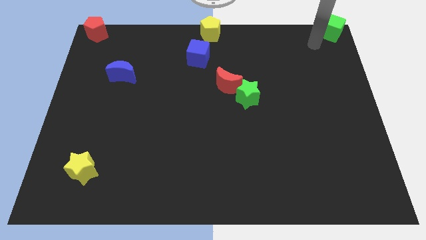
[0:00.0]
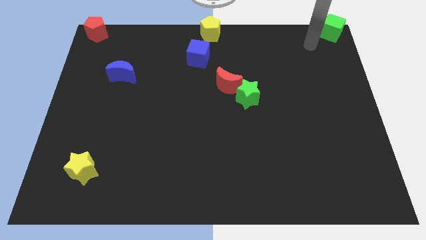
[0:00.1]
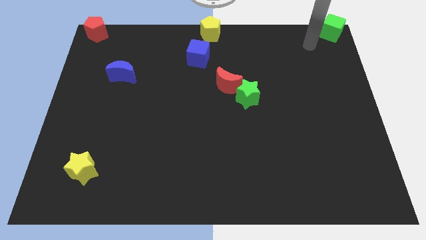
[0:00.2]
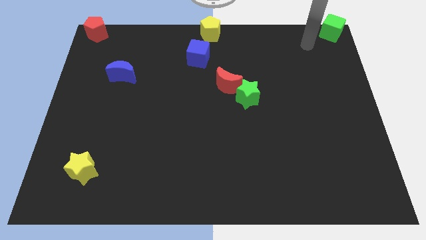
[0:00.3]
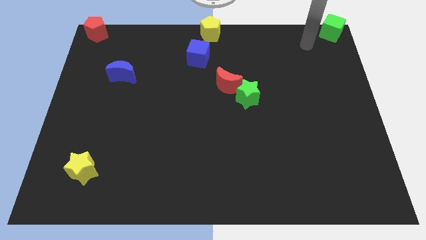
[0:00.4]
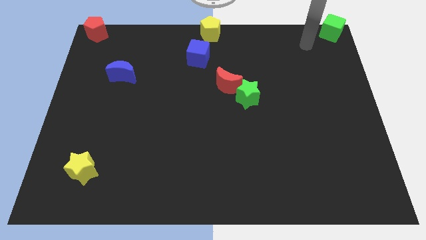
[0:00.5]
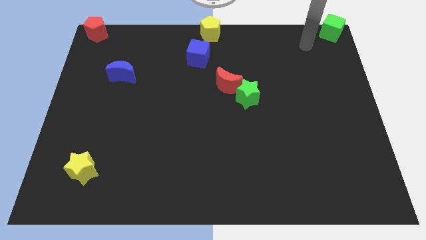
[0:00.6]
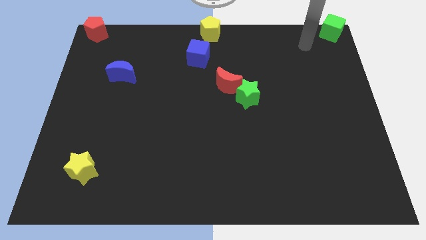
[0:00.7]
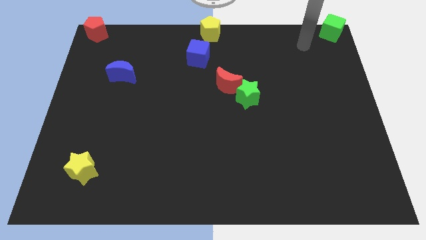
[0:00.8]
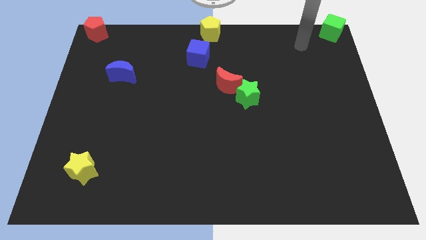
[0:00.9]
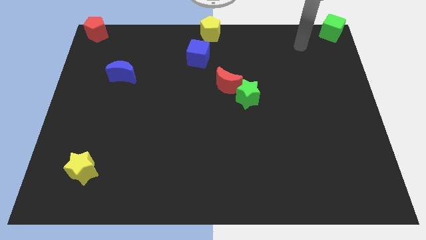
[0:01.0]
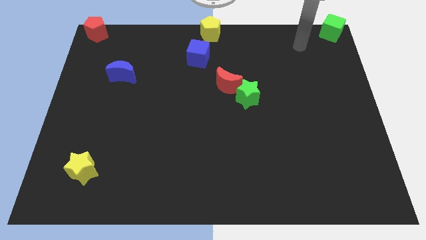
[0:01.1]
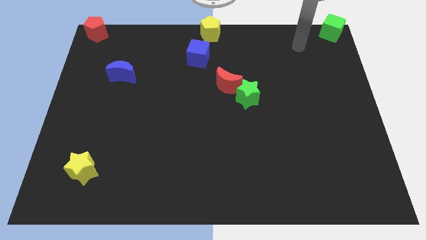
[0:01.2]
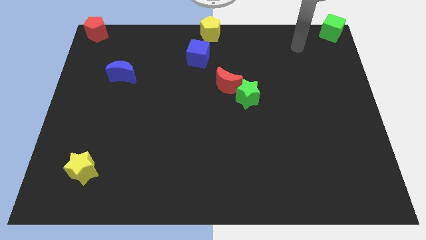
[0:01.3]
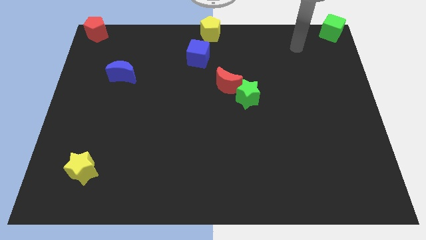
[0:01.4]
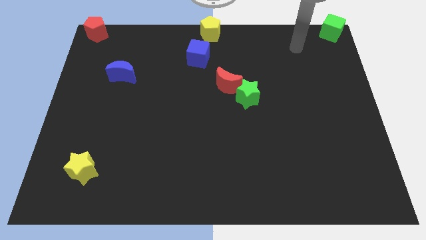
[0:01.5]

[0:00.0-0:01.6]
move the arm away from the green cube

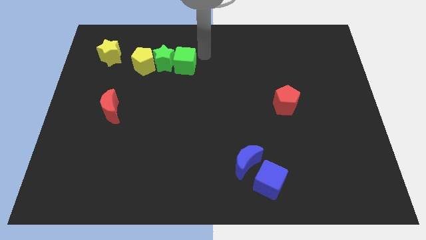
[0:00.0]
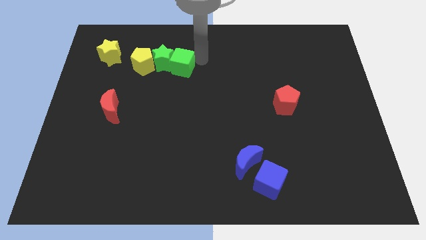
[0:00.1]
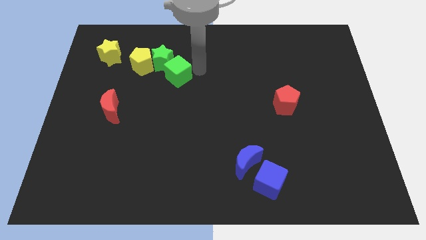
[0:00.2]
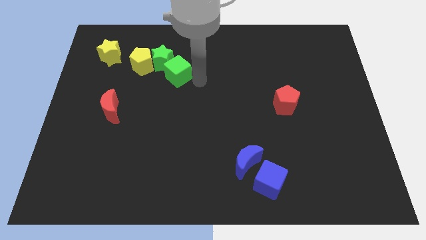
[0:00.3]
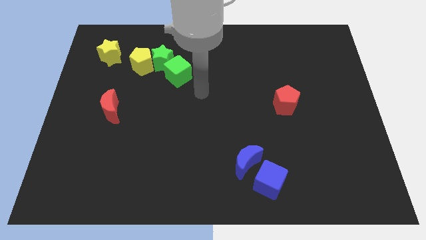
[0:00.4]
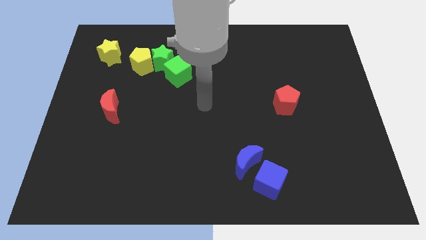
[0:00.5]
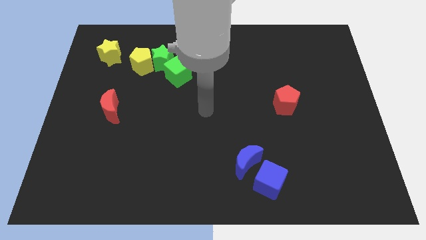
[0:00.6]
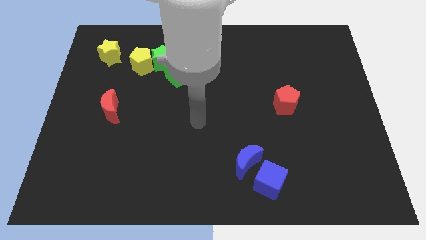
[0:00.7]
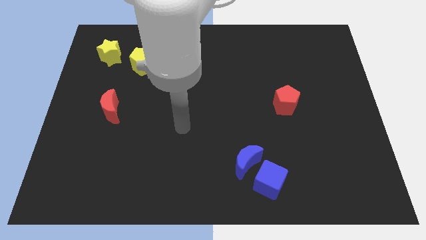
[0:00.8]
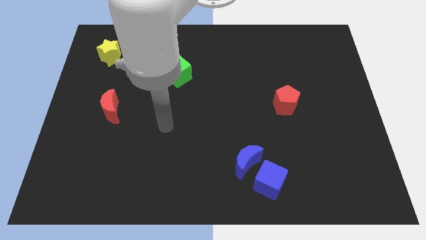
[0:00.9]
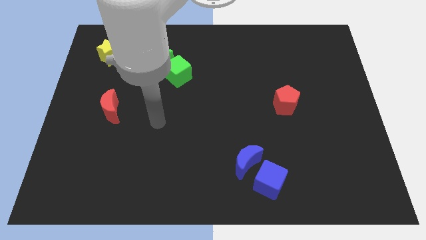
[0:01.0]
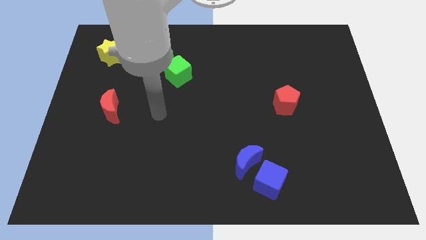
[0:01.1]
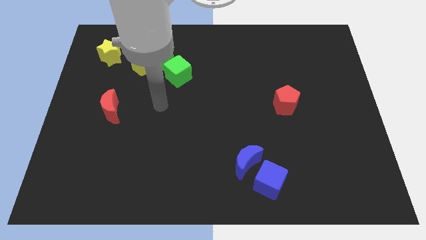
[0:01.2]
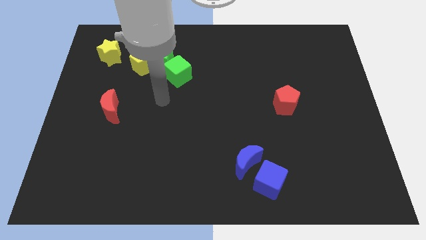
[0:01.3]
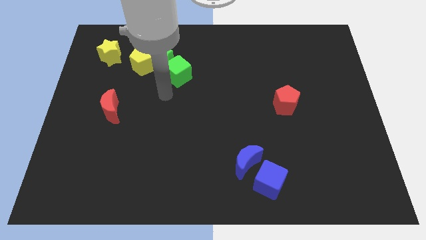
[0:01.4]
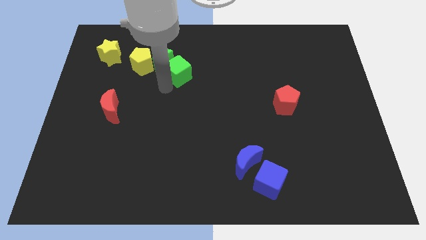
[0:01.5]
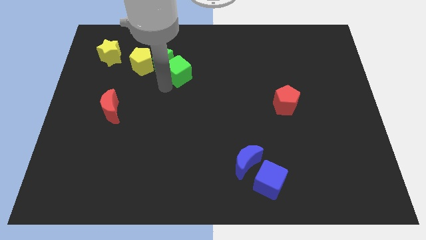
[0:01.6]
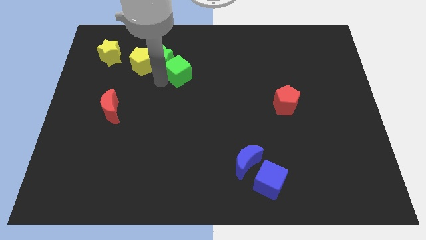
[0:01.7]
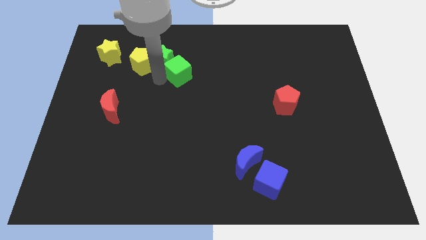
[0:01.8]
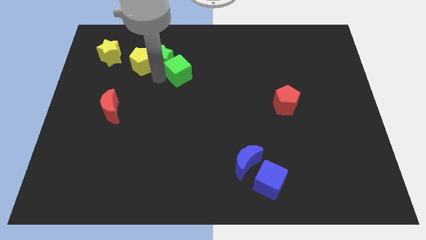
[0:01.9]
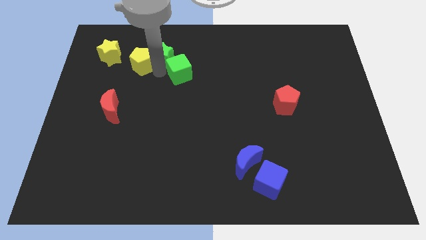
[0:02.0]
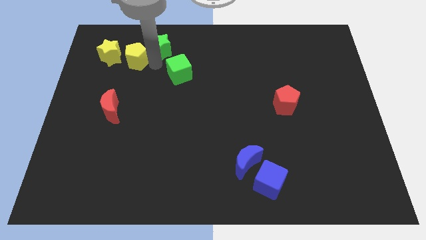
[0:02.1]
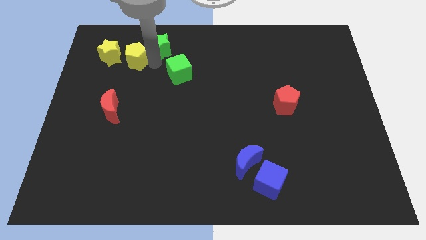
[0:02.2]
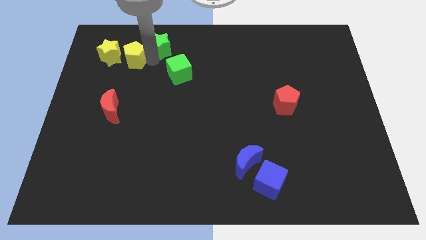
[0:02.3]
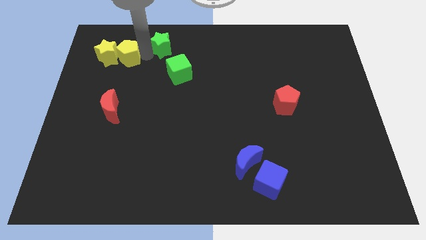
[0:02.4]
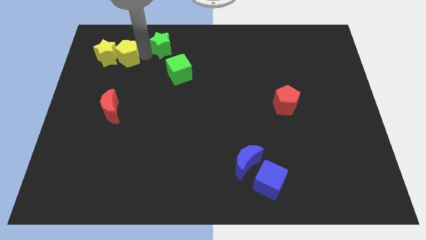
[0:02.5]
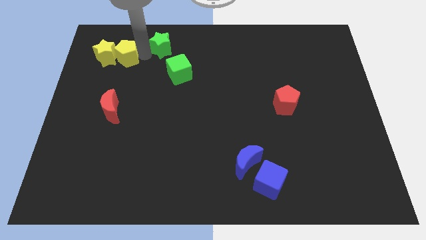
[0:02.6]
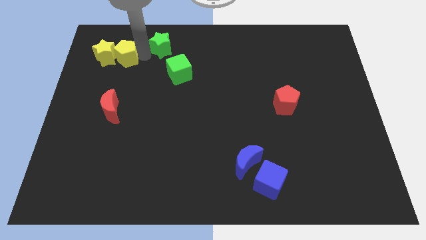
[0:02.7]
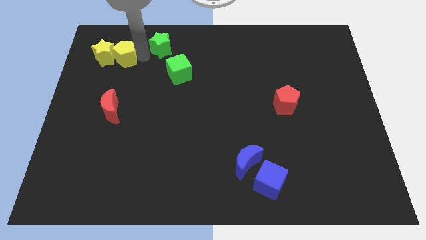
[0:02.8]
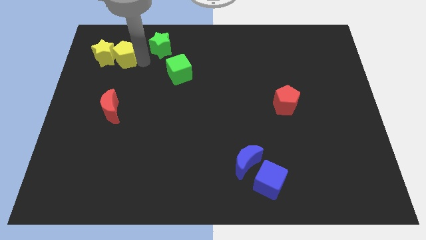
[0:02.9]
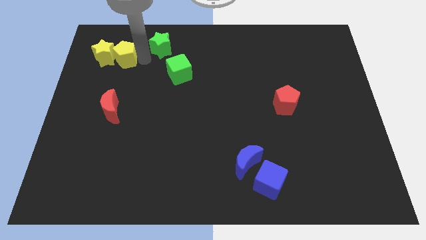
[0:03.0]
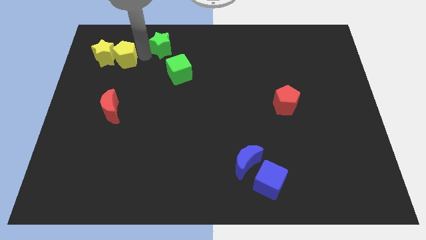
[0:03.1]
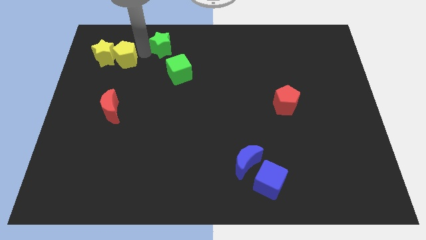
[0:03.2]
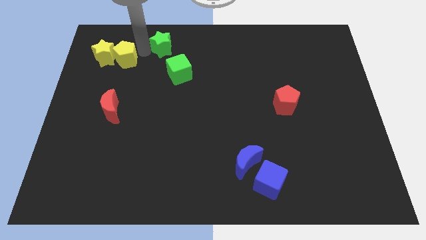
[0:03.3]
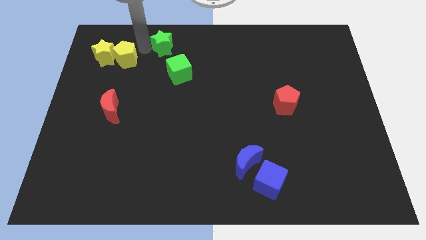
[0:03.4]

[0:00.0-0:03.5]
move the yellow pentagon into the yellow star

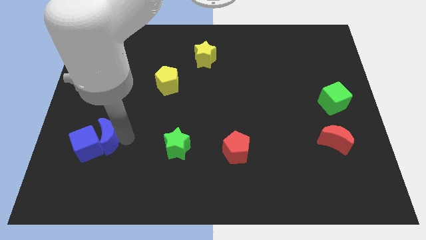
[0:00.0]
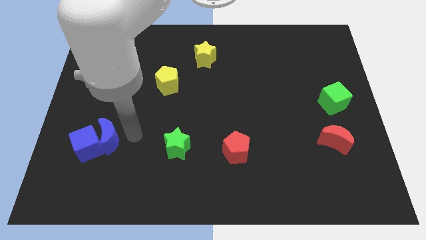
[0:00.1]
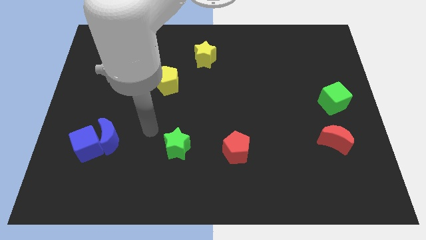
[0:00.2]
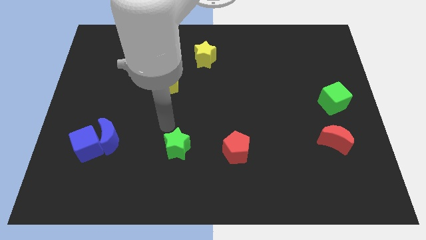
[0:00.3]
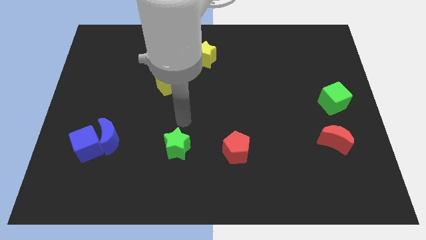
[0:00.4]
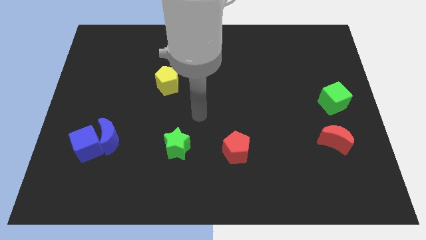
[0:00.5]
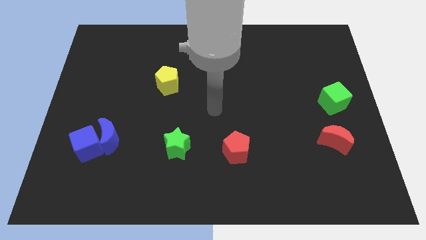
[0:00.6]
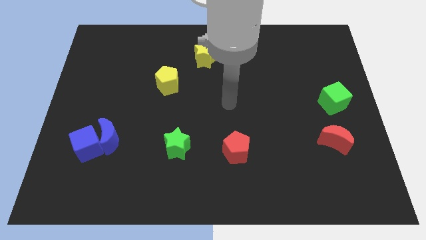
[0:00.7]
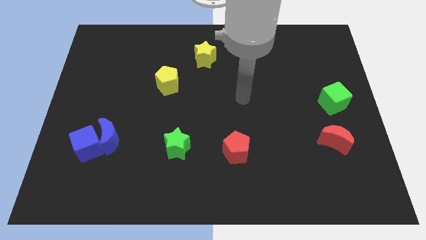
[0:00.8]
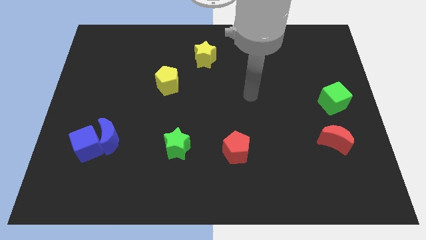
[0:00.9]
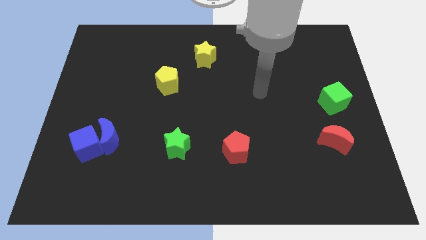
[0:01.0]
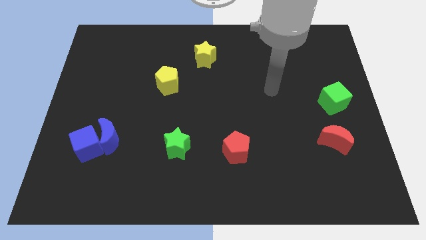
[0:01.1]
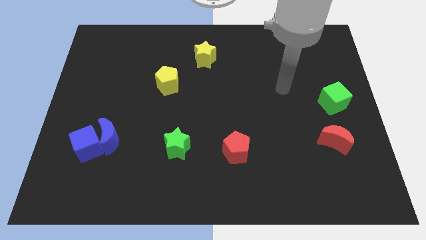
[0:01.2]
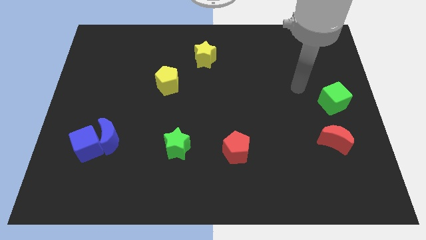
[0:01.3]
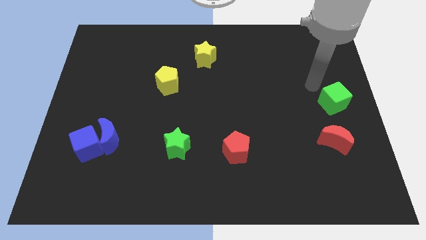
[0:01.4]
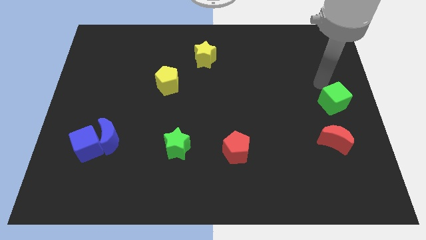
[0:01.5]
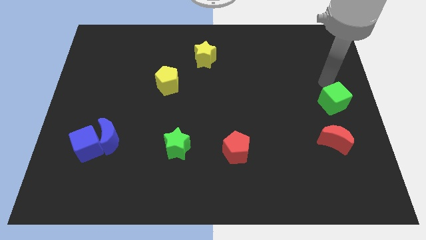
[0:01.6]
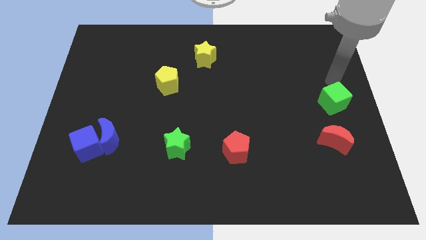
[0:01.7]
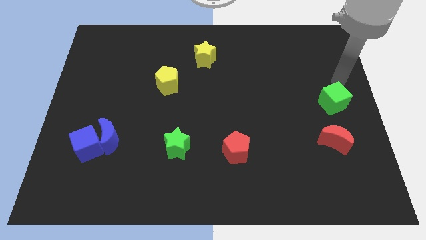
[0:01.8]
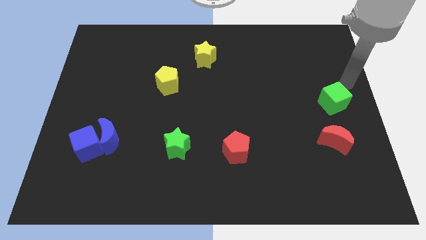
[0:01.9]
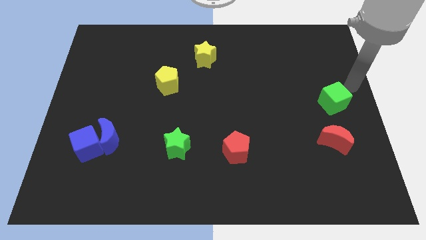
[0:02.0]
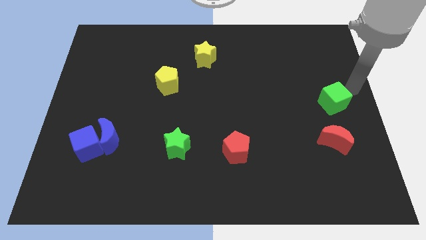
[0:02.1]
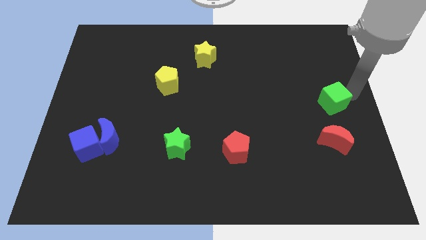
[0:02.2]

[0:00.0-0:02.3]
move your arm away from the blue moon

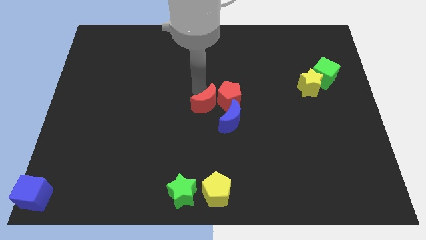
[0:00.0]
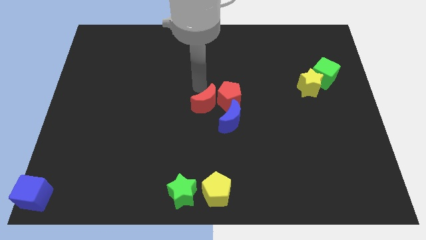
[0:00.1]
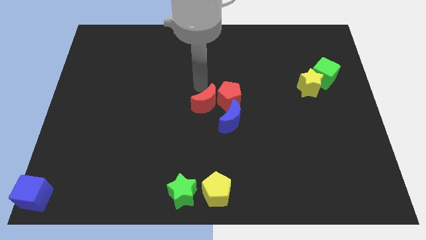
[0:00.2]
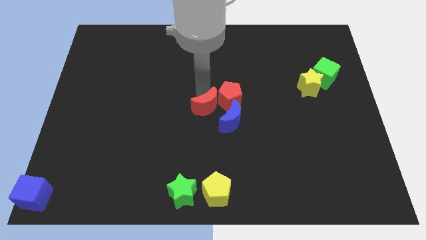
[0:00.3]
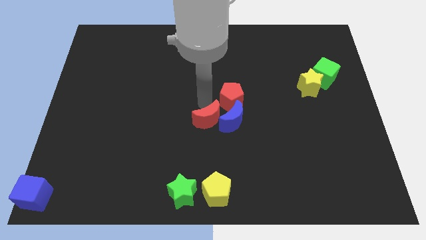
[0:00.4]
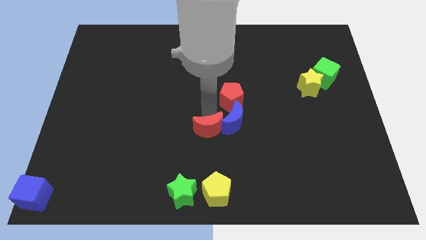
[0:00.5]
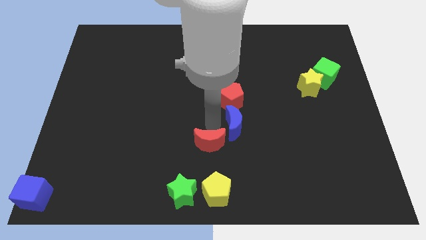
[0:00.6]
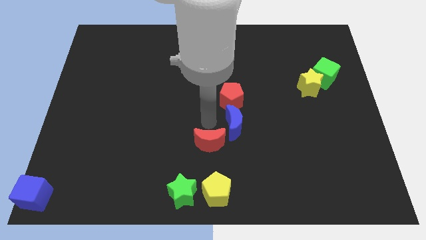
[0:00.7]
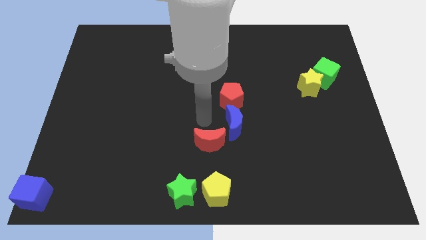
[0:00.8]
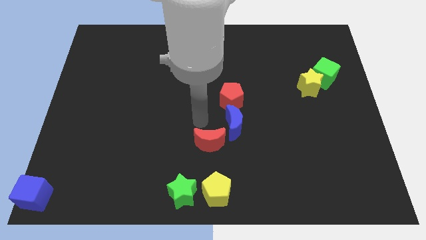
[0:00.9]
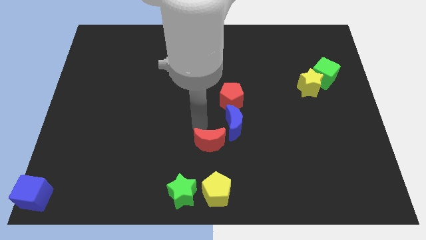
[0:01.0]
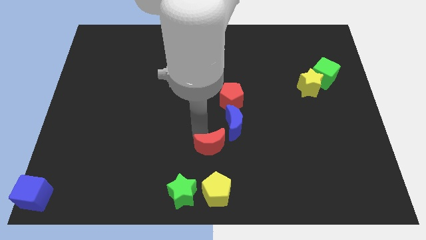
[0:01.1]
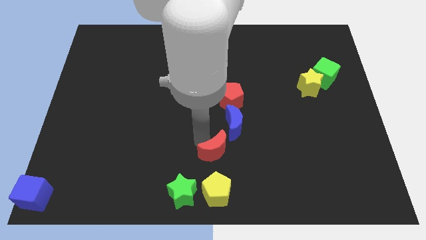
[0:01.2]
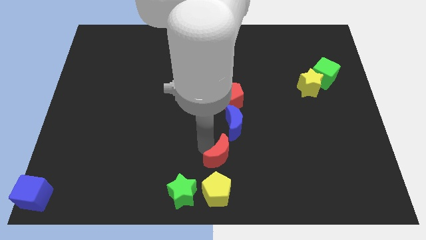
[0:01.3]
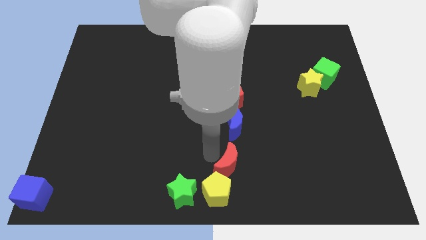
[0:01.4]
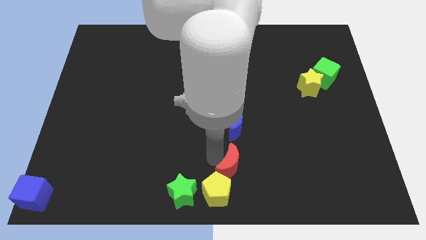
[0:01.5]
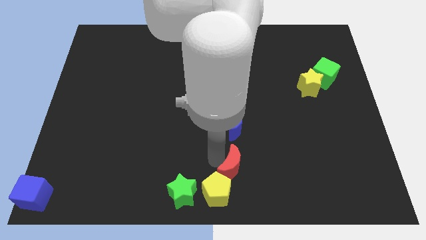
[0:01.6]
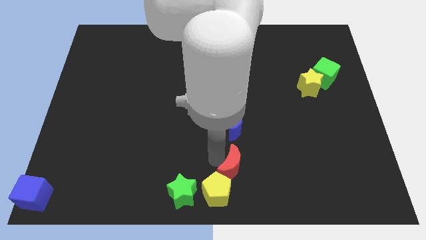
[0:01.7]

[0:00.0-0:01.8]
slide the red moon above the yellow pentagon
